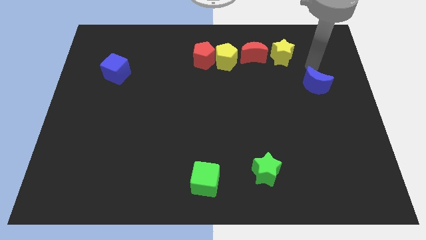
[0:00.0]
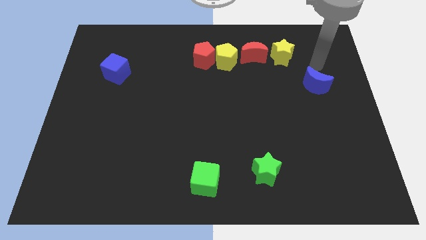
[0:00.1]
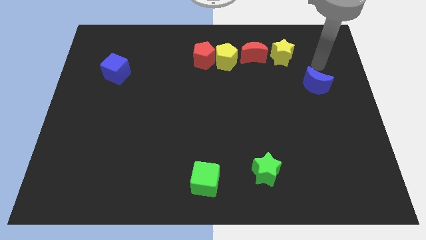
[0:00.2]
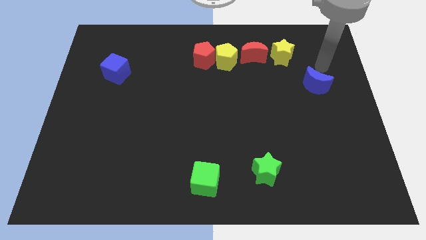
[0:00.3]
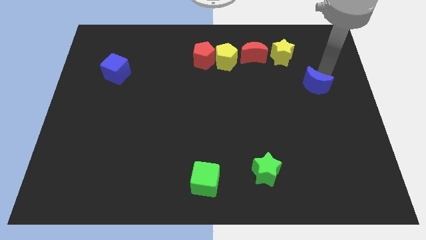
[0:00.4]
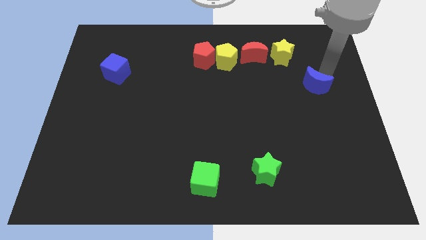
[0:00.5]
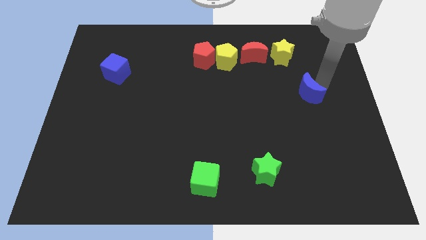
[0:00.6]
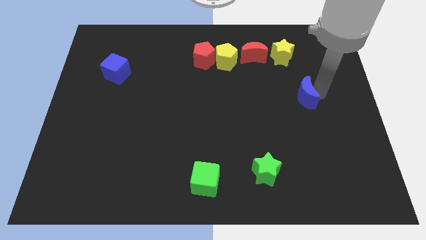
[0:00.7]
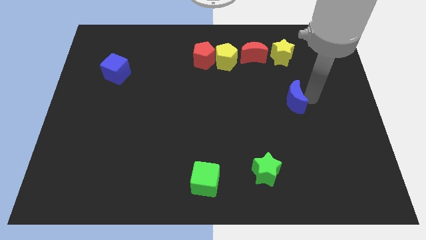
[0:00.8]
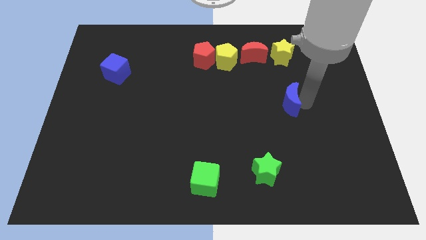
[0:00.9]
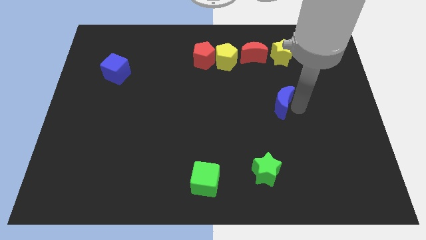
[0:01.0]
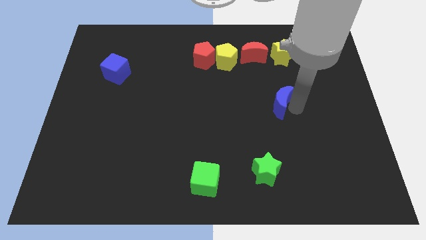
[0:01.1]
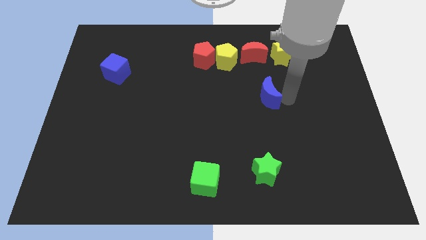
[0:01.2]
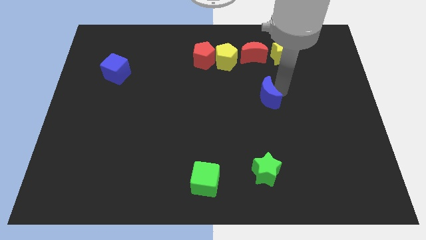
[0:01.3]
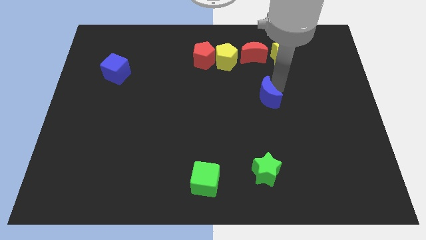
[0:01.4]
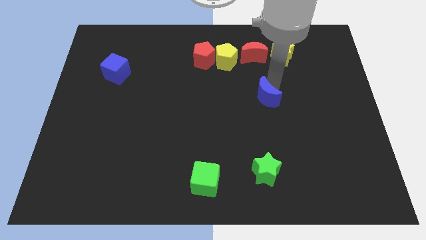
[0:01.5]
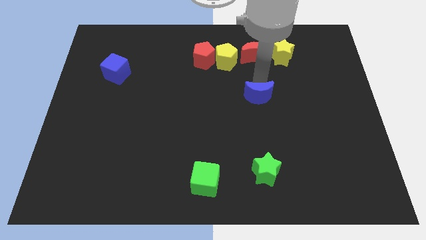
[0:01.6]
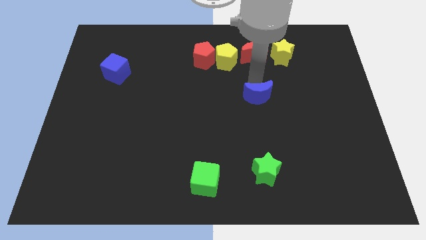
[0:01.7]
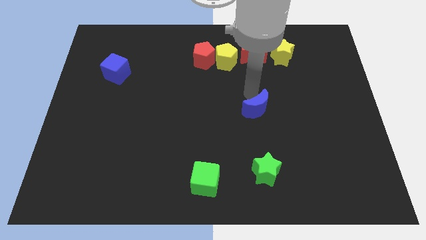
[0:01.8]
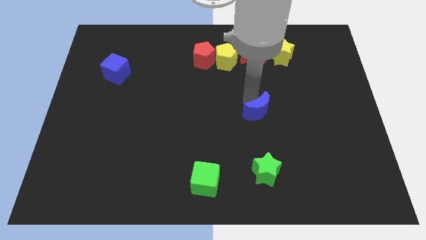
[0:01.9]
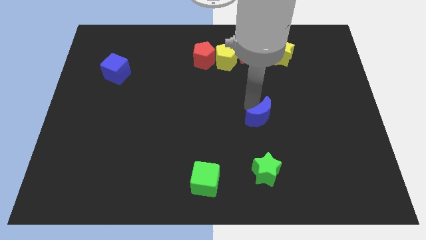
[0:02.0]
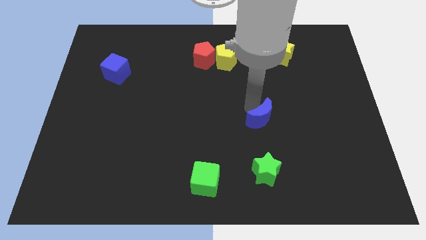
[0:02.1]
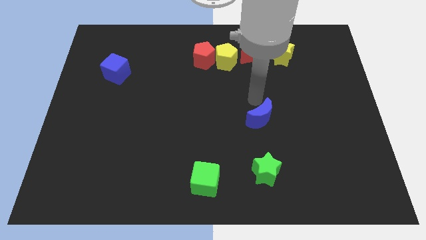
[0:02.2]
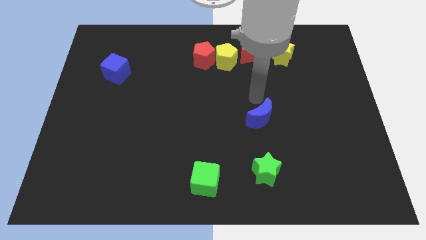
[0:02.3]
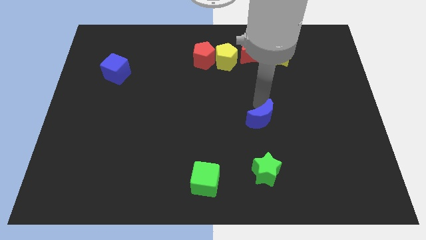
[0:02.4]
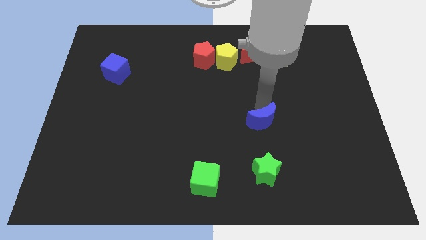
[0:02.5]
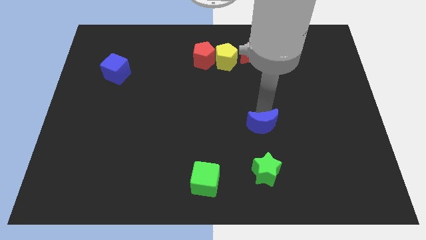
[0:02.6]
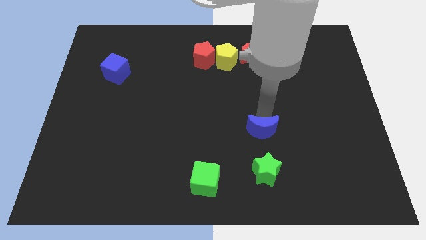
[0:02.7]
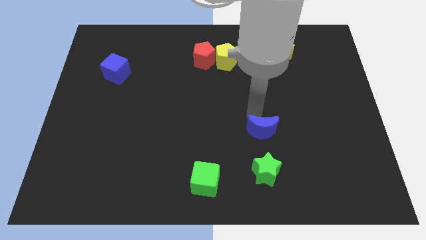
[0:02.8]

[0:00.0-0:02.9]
drag the blue moon above the green star

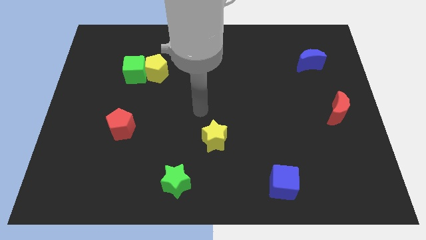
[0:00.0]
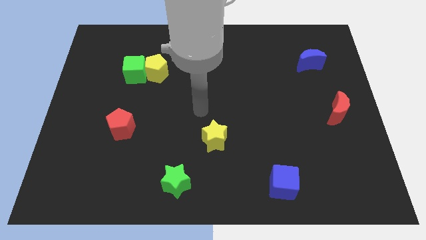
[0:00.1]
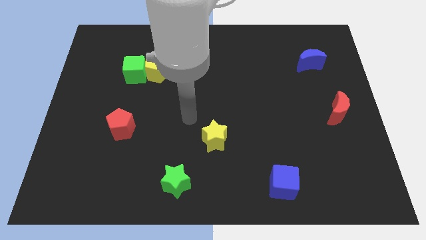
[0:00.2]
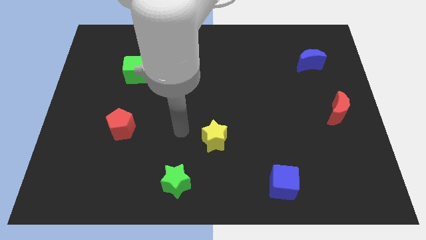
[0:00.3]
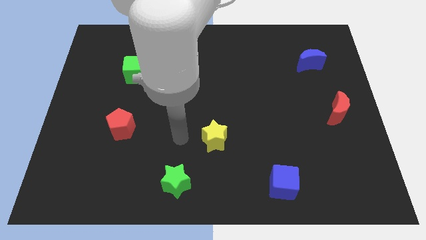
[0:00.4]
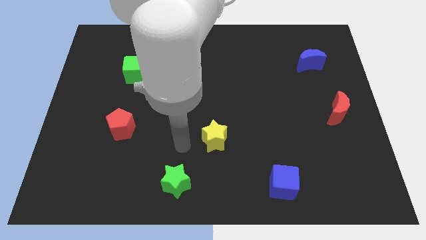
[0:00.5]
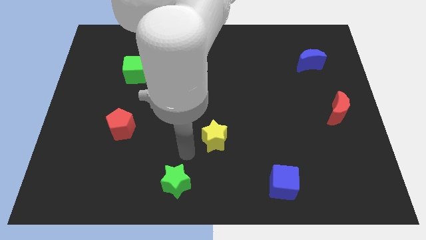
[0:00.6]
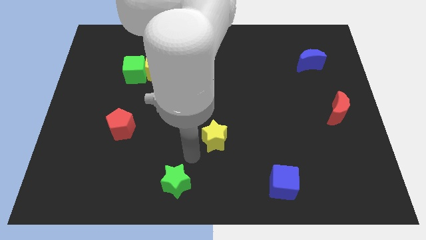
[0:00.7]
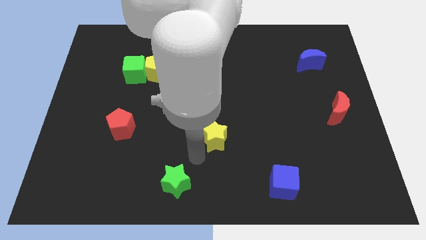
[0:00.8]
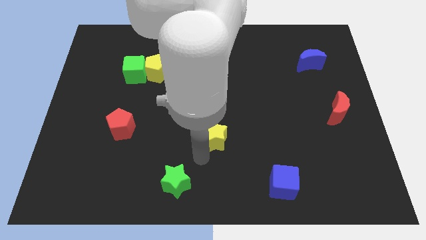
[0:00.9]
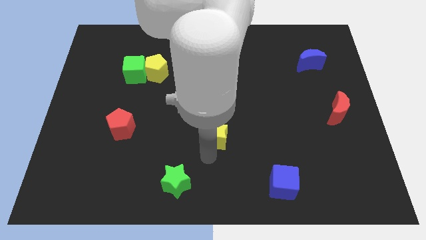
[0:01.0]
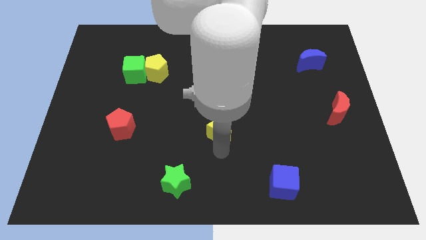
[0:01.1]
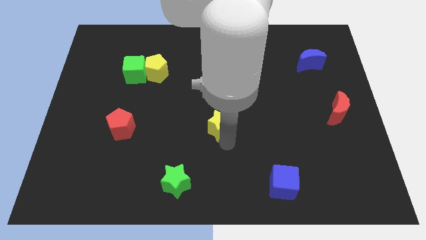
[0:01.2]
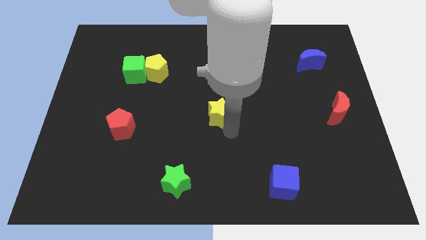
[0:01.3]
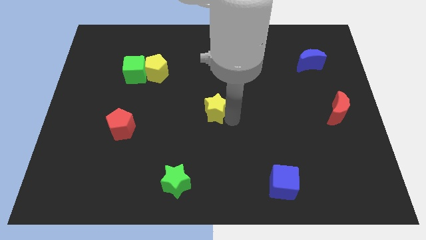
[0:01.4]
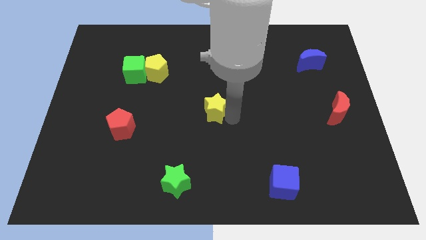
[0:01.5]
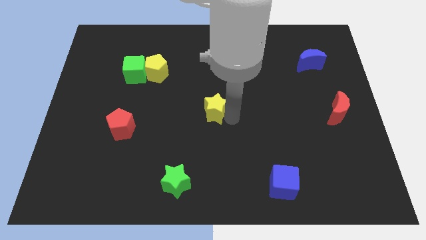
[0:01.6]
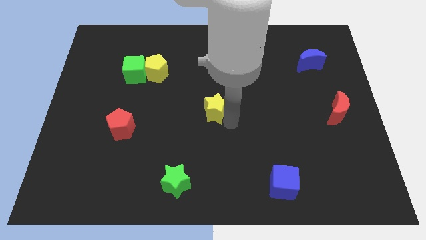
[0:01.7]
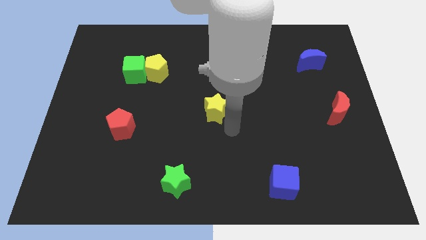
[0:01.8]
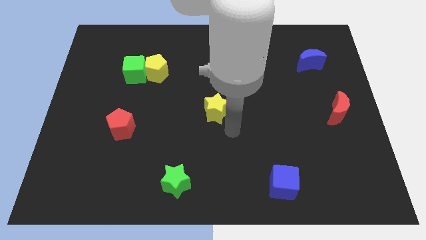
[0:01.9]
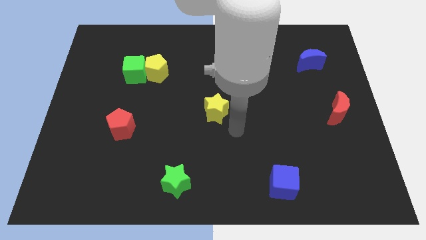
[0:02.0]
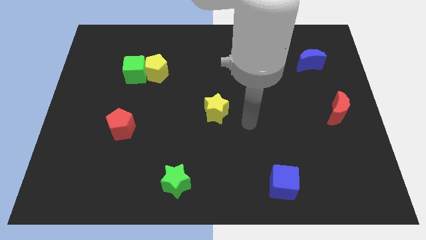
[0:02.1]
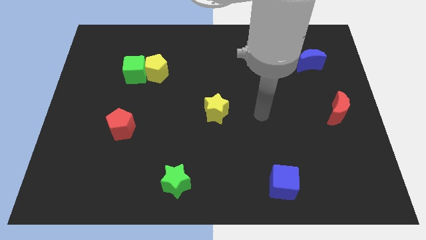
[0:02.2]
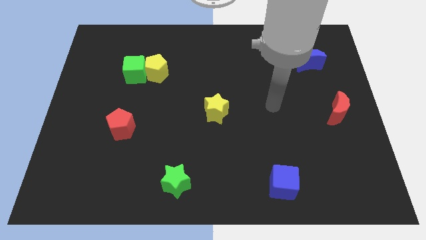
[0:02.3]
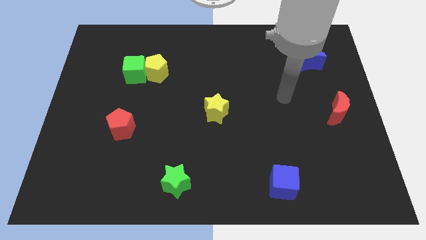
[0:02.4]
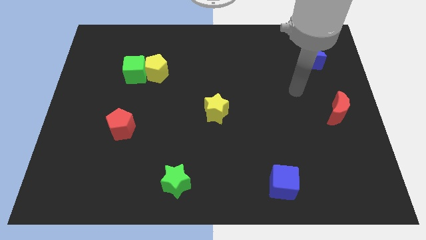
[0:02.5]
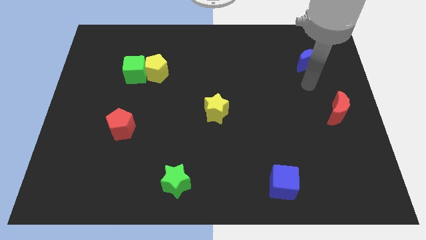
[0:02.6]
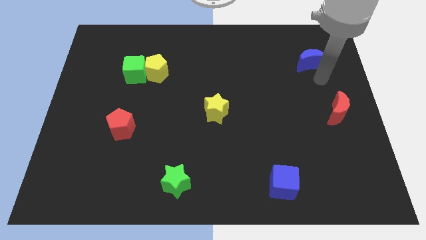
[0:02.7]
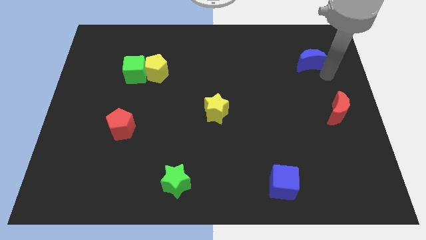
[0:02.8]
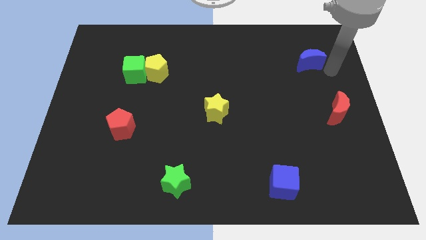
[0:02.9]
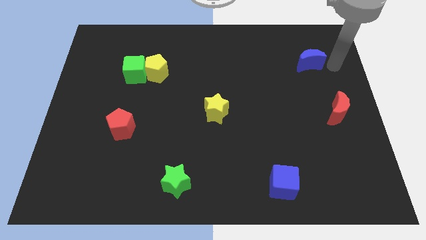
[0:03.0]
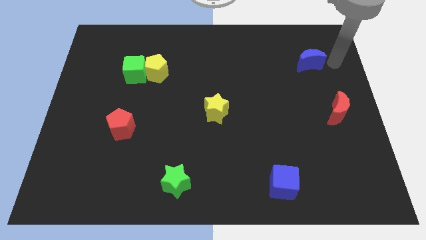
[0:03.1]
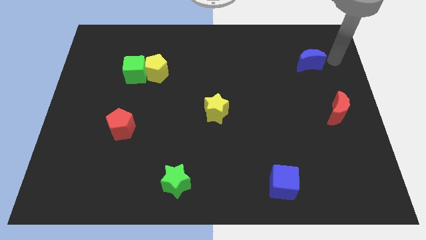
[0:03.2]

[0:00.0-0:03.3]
push the yellow star to the center and move away

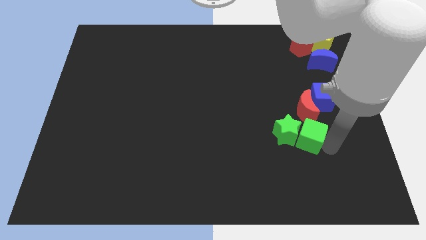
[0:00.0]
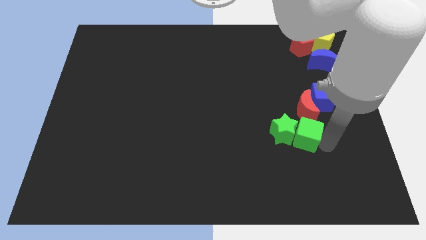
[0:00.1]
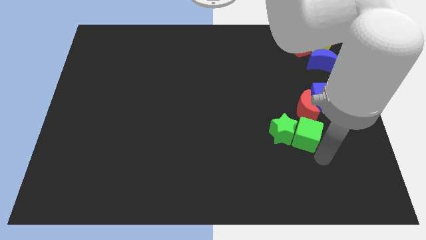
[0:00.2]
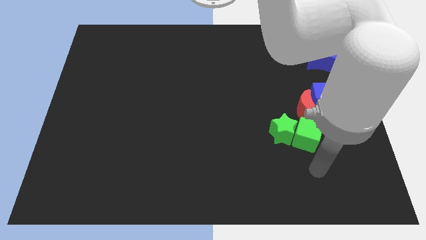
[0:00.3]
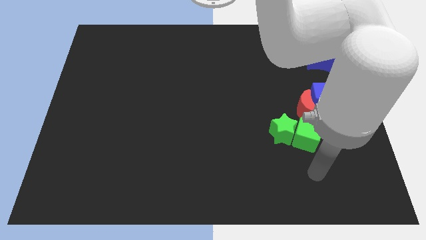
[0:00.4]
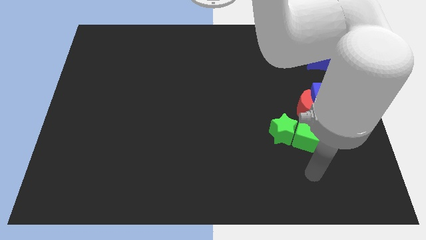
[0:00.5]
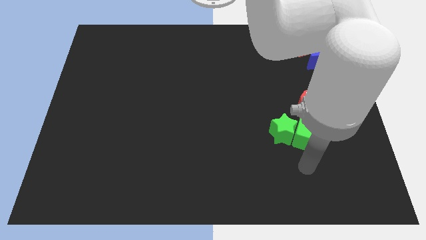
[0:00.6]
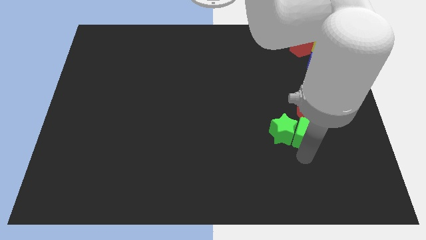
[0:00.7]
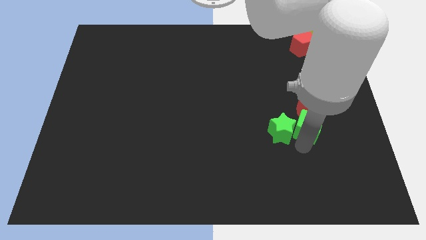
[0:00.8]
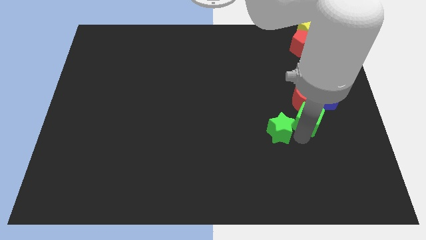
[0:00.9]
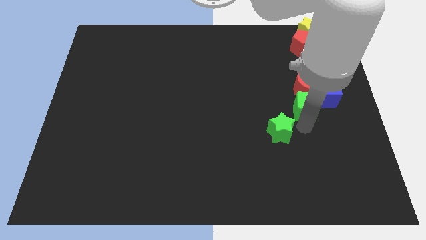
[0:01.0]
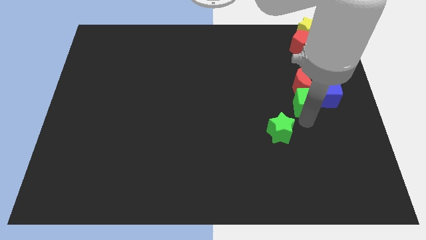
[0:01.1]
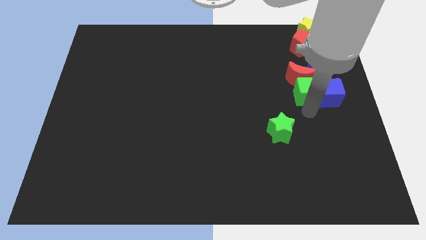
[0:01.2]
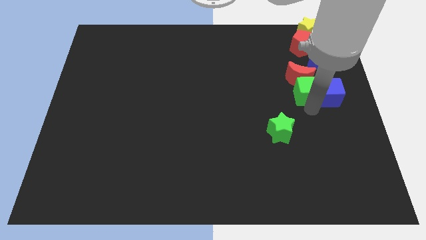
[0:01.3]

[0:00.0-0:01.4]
place the green cube below the red crescent

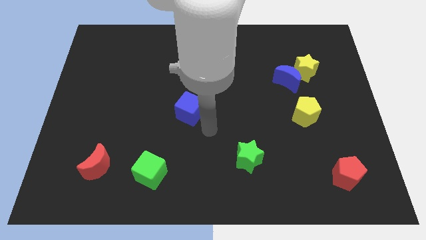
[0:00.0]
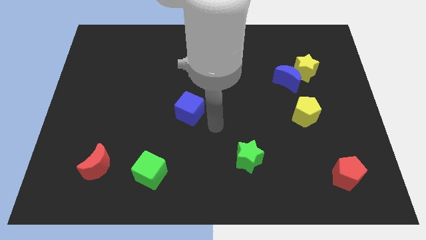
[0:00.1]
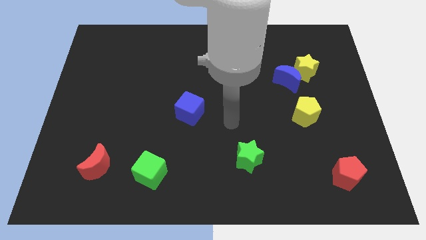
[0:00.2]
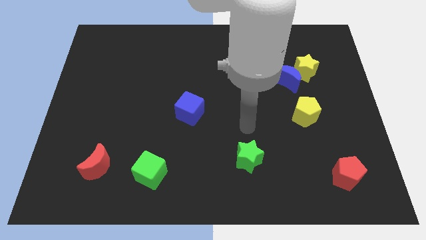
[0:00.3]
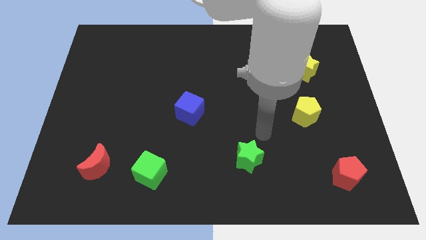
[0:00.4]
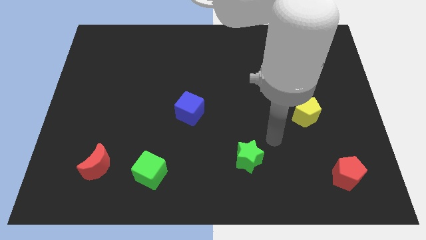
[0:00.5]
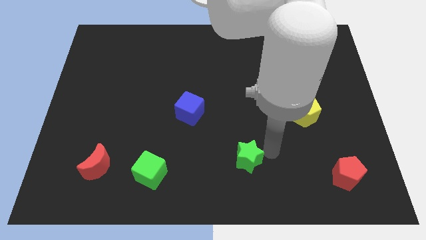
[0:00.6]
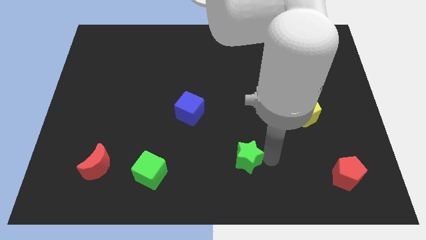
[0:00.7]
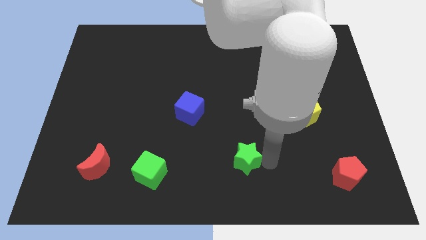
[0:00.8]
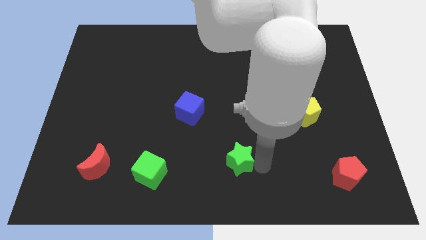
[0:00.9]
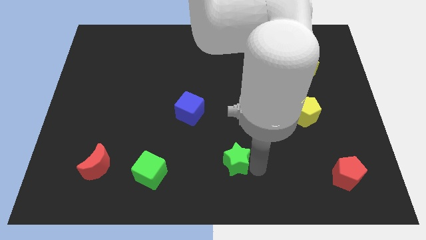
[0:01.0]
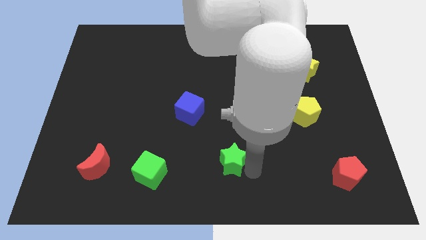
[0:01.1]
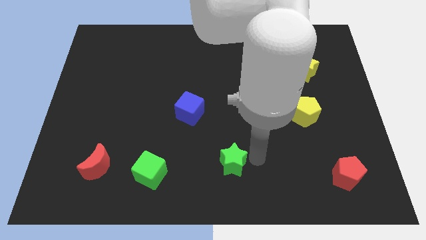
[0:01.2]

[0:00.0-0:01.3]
push the green star near the bottom center of the board

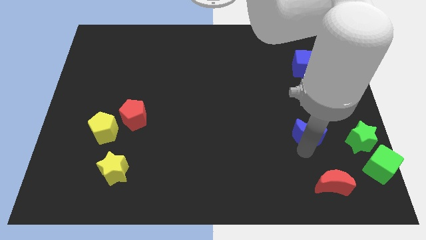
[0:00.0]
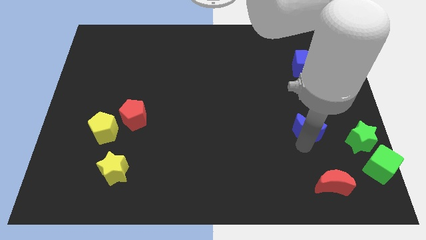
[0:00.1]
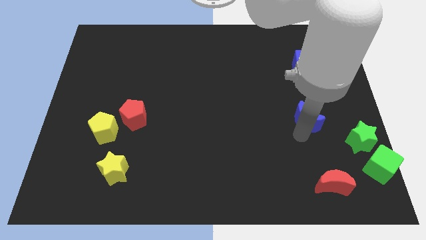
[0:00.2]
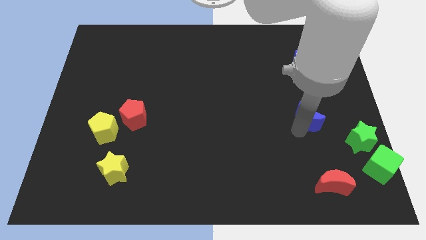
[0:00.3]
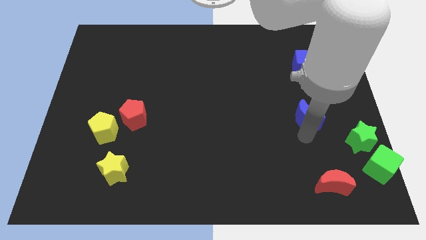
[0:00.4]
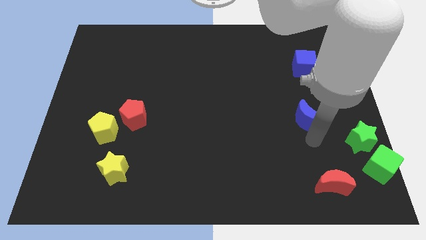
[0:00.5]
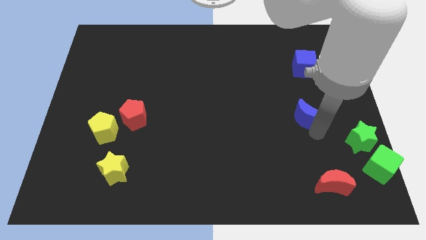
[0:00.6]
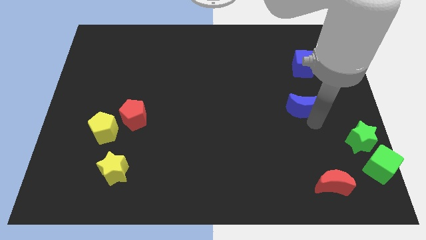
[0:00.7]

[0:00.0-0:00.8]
push the blue crescent towards the right center of the board
